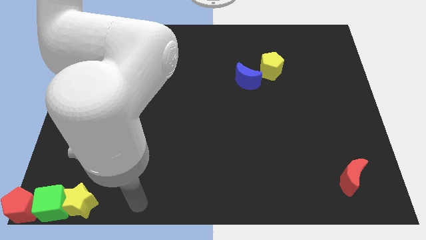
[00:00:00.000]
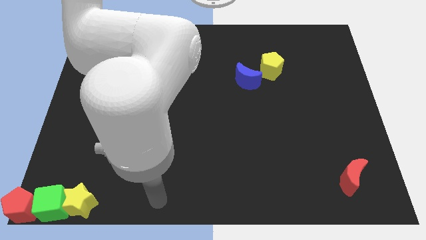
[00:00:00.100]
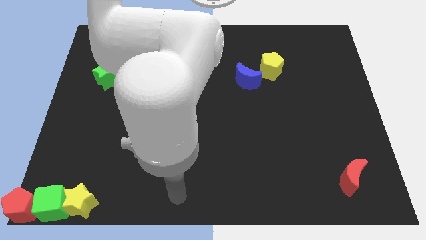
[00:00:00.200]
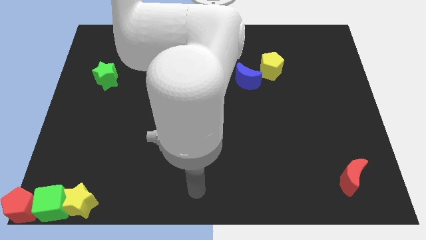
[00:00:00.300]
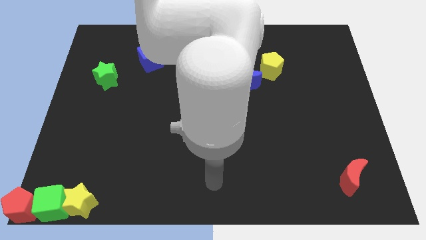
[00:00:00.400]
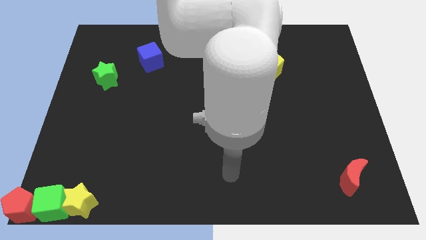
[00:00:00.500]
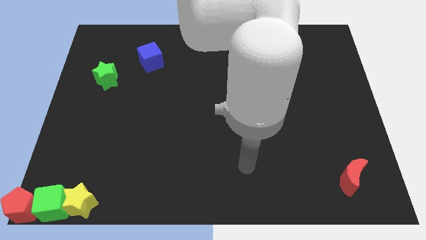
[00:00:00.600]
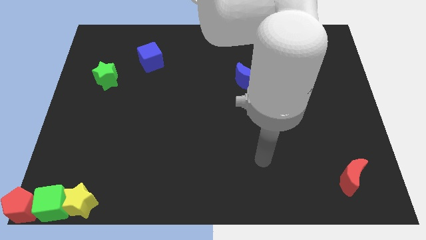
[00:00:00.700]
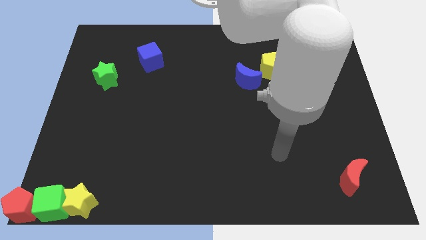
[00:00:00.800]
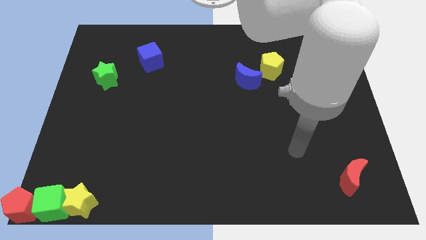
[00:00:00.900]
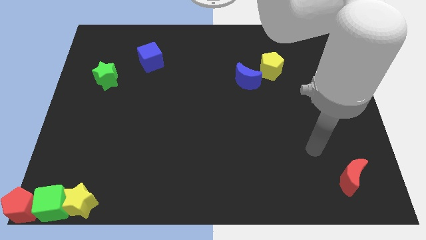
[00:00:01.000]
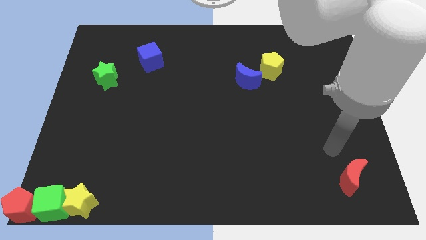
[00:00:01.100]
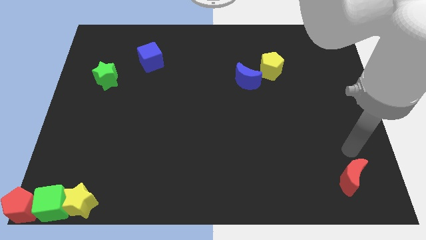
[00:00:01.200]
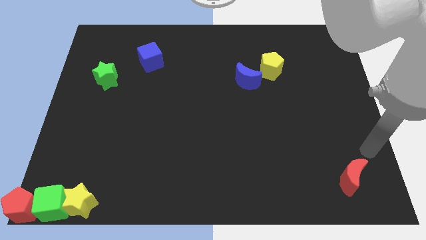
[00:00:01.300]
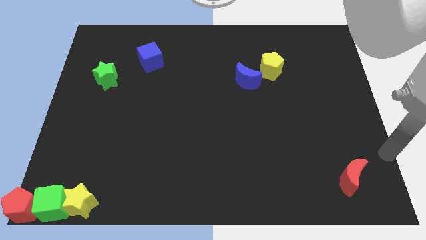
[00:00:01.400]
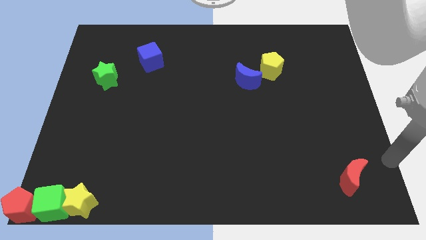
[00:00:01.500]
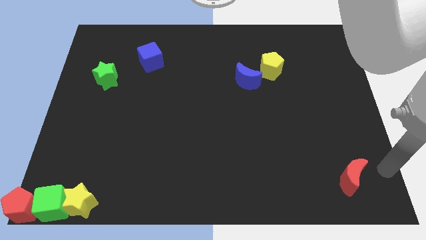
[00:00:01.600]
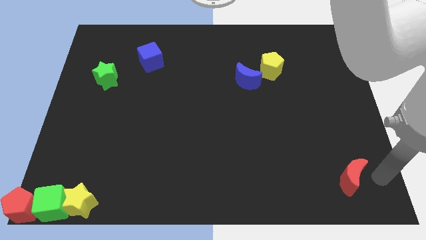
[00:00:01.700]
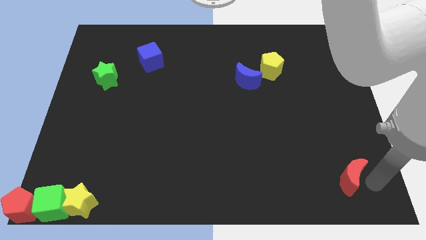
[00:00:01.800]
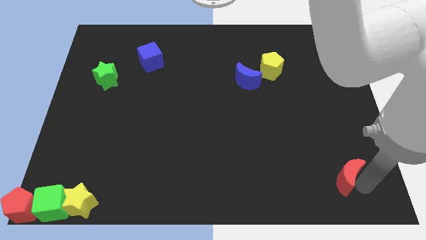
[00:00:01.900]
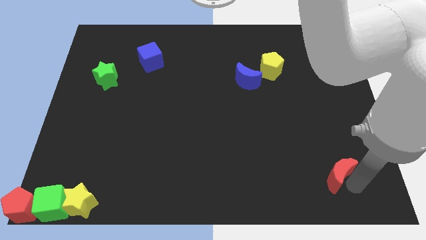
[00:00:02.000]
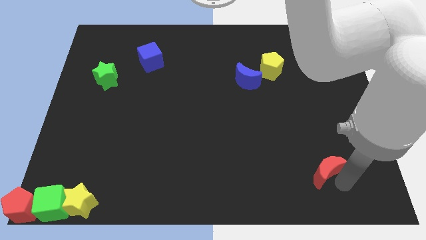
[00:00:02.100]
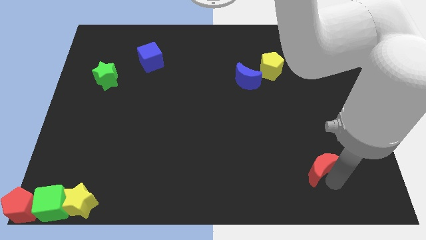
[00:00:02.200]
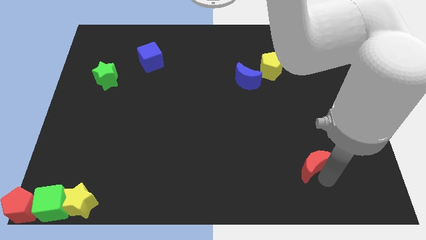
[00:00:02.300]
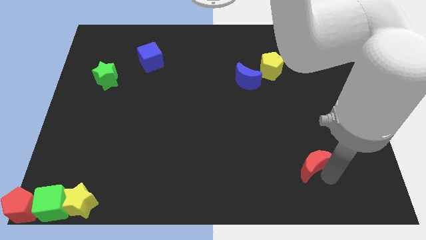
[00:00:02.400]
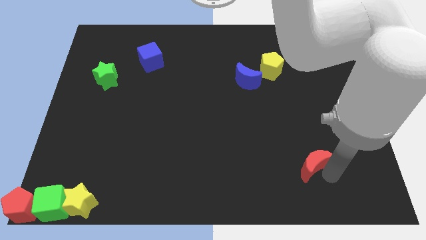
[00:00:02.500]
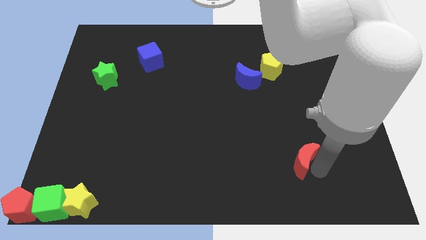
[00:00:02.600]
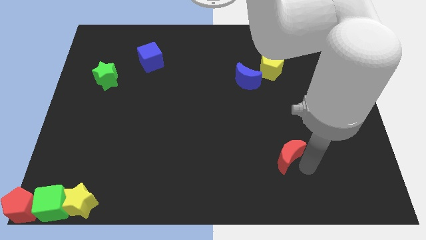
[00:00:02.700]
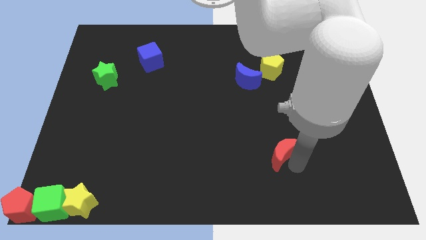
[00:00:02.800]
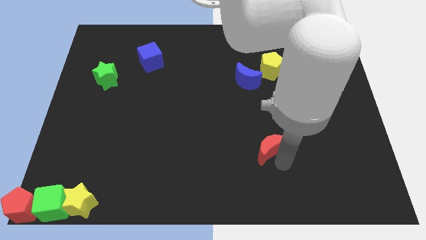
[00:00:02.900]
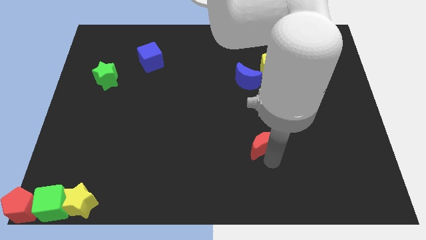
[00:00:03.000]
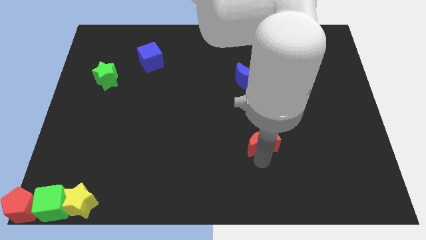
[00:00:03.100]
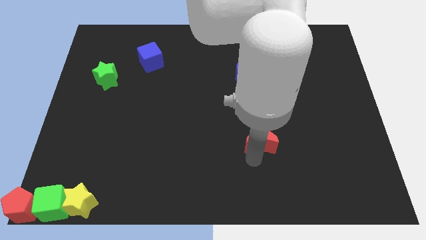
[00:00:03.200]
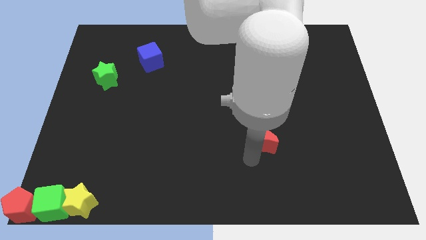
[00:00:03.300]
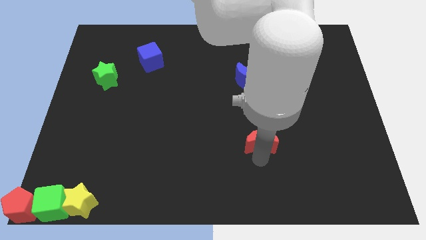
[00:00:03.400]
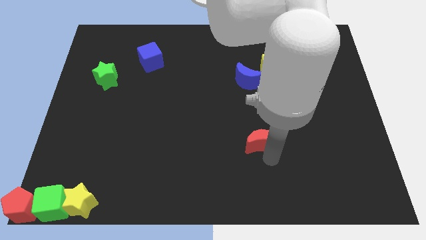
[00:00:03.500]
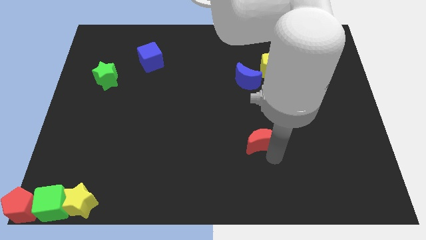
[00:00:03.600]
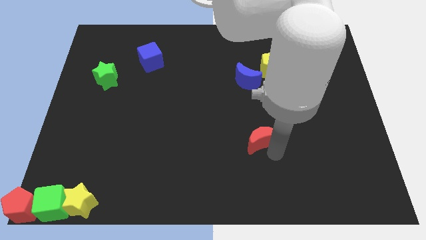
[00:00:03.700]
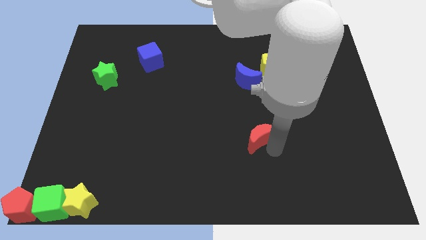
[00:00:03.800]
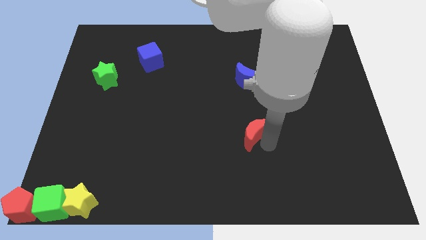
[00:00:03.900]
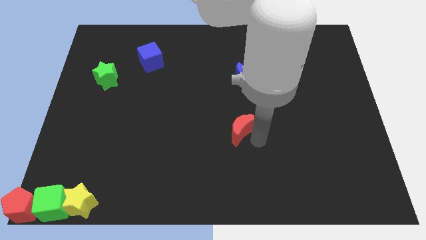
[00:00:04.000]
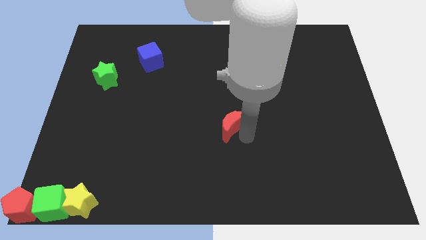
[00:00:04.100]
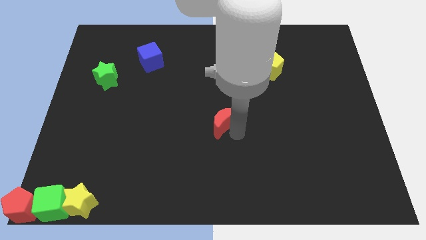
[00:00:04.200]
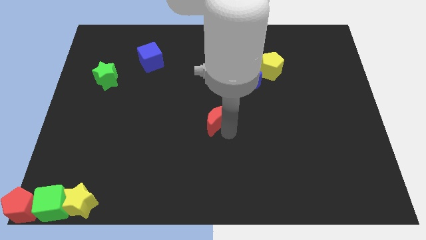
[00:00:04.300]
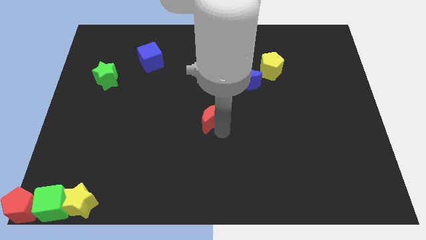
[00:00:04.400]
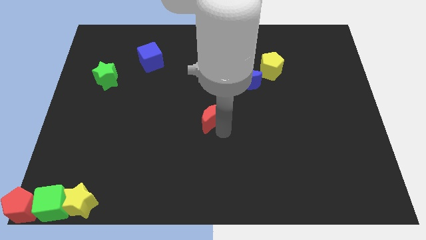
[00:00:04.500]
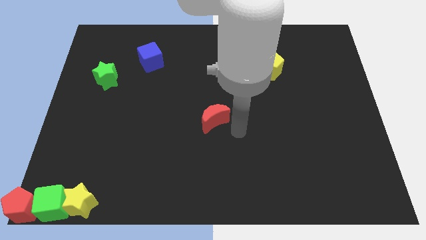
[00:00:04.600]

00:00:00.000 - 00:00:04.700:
place the red moon at the center of the board

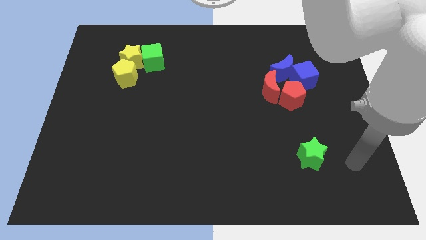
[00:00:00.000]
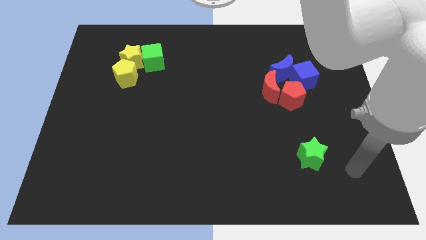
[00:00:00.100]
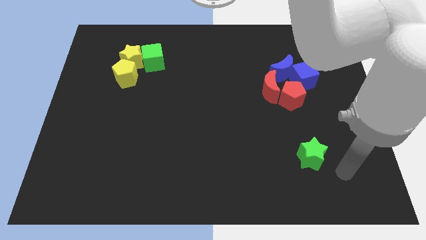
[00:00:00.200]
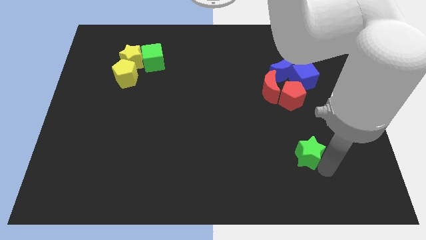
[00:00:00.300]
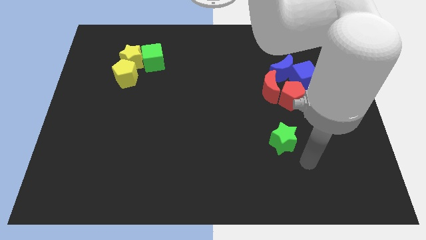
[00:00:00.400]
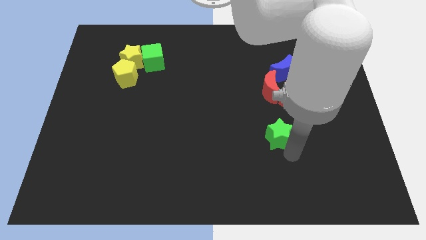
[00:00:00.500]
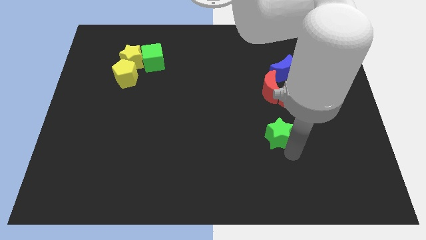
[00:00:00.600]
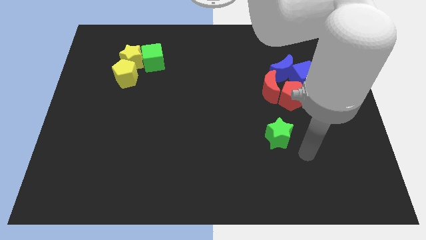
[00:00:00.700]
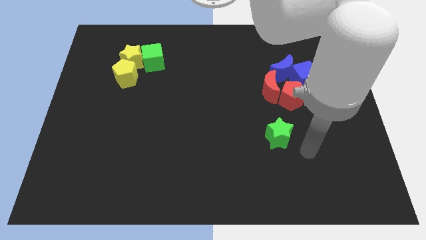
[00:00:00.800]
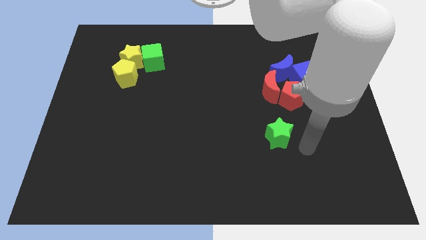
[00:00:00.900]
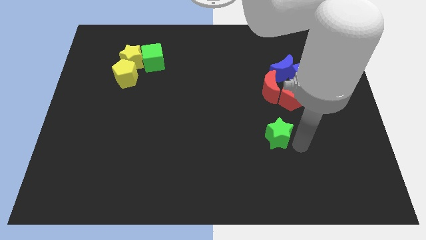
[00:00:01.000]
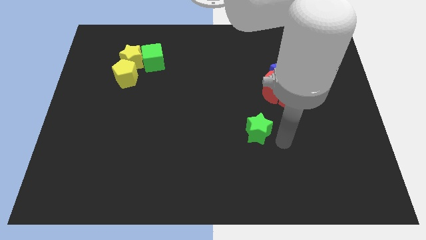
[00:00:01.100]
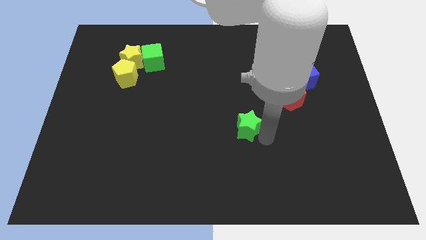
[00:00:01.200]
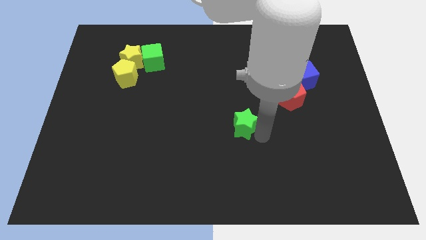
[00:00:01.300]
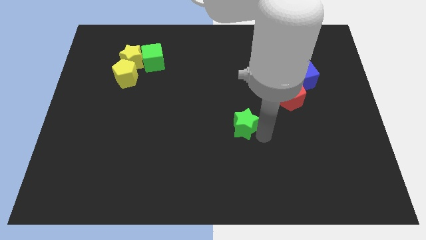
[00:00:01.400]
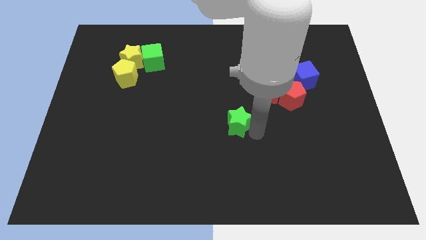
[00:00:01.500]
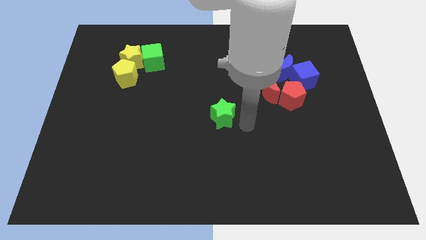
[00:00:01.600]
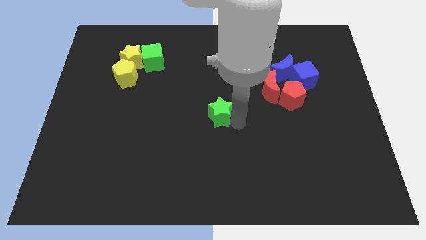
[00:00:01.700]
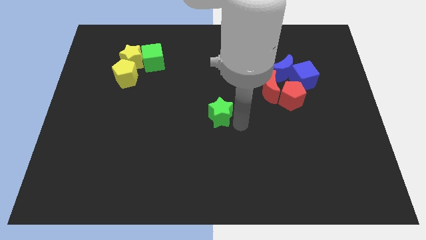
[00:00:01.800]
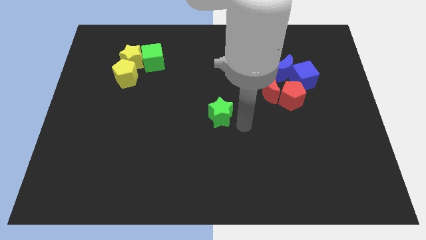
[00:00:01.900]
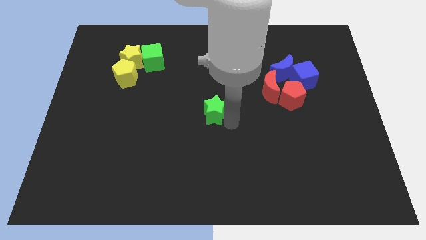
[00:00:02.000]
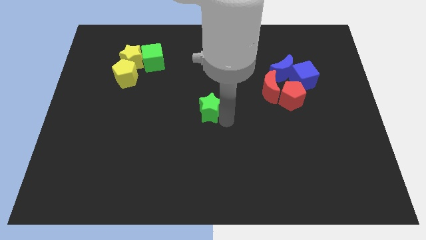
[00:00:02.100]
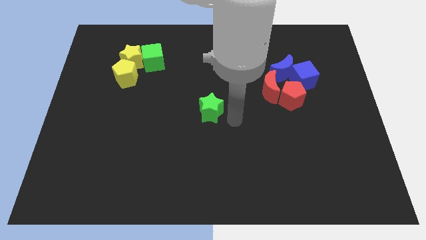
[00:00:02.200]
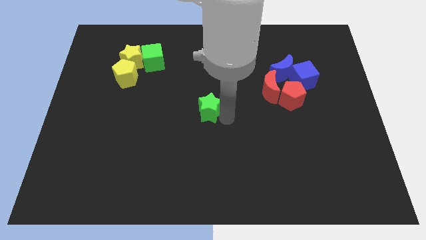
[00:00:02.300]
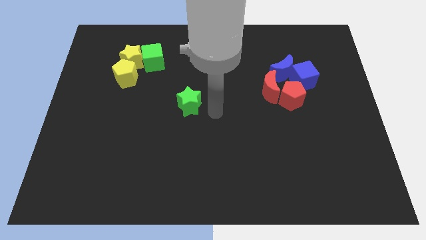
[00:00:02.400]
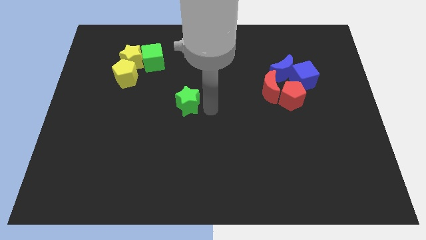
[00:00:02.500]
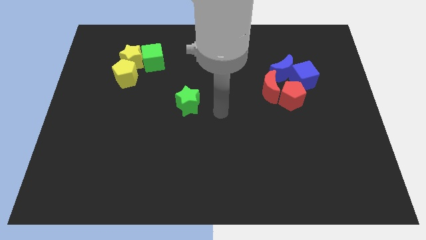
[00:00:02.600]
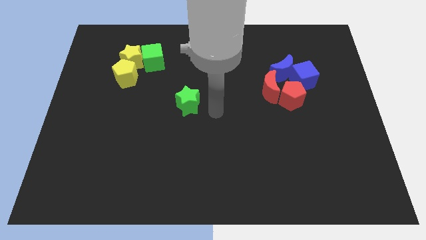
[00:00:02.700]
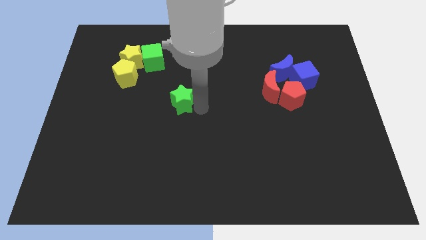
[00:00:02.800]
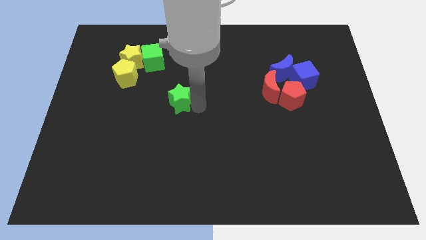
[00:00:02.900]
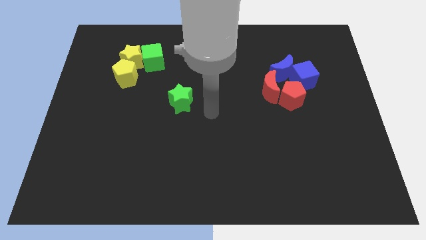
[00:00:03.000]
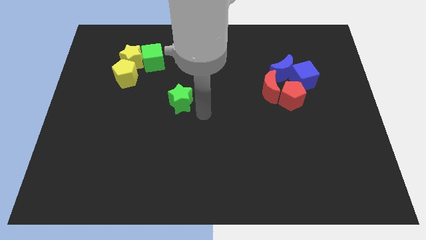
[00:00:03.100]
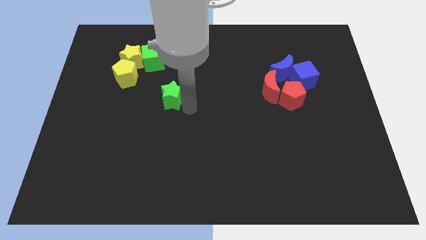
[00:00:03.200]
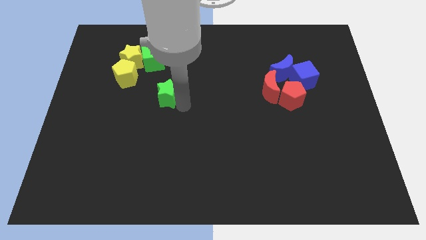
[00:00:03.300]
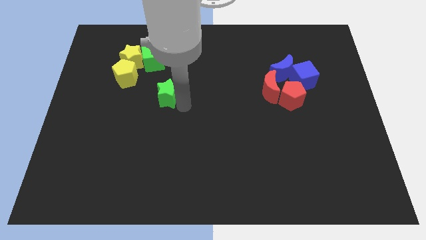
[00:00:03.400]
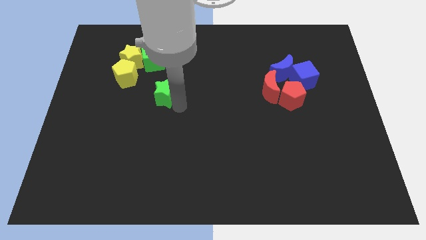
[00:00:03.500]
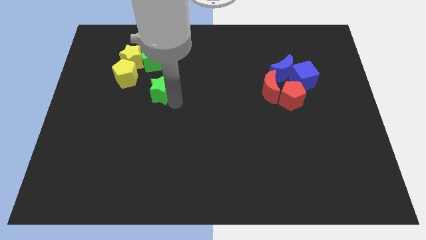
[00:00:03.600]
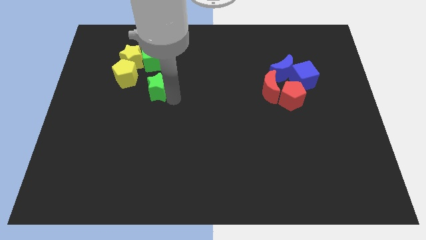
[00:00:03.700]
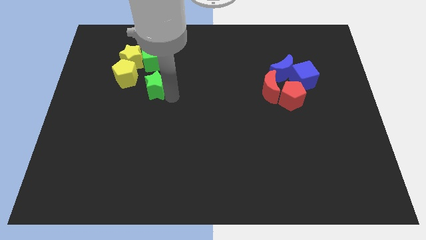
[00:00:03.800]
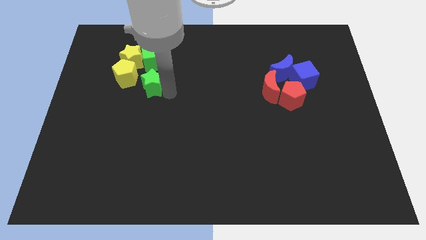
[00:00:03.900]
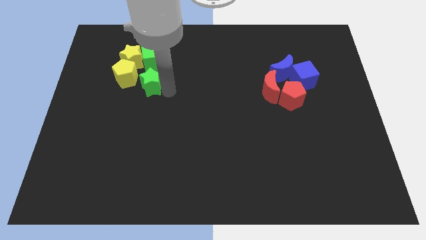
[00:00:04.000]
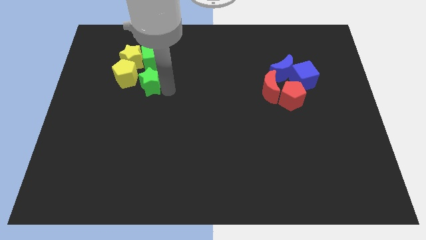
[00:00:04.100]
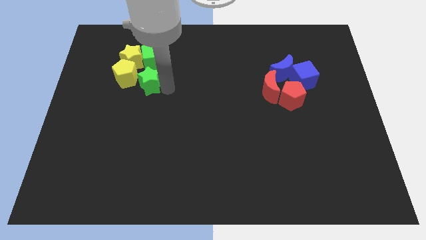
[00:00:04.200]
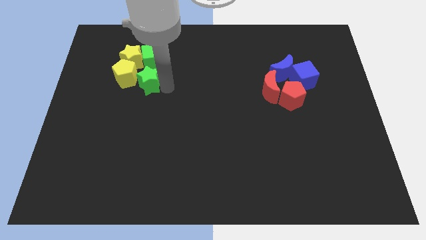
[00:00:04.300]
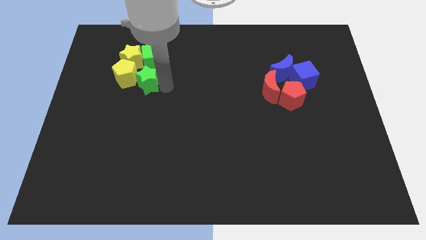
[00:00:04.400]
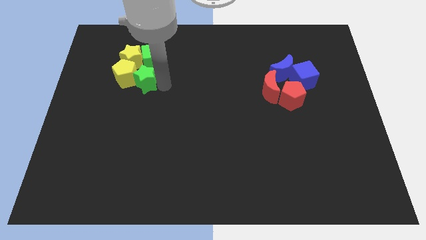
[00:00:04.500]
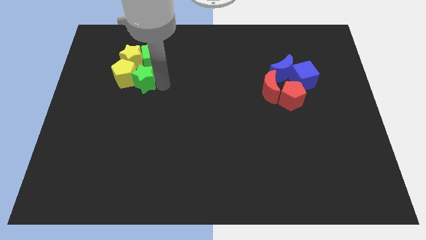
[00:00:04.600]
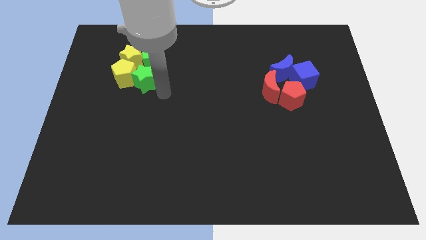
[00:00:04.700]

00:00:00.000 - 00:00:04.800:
move the green star into the right side of the yellow pentagon
